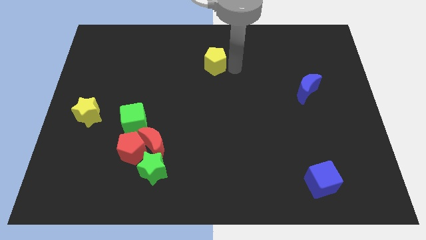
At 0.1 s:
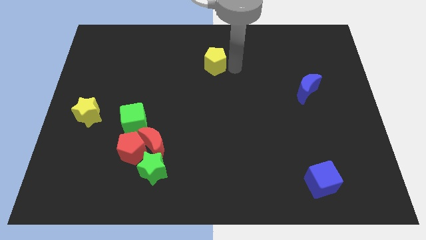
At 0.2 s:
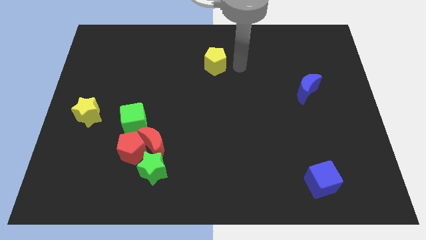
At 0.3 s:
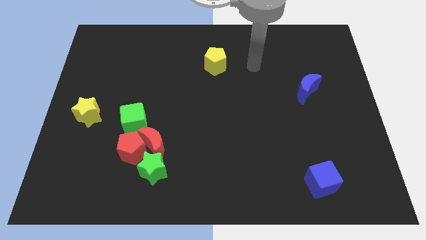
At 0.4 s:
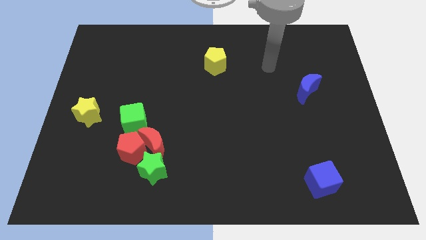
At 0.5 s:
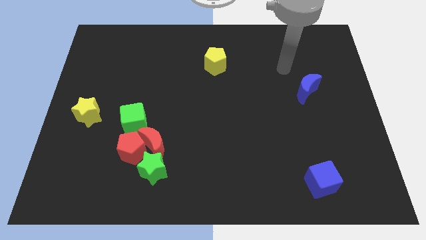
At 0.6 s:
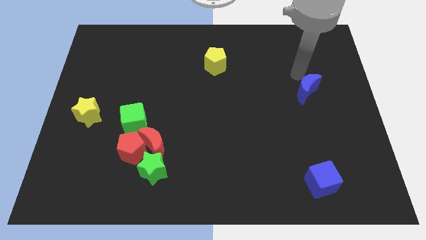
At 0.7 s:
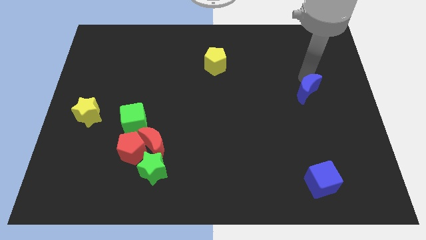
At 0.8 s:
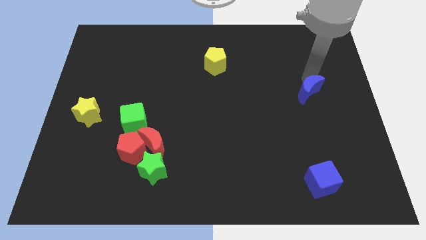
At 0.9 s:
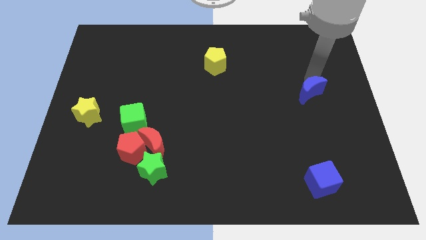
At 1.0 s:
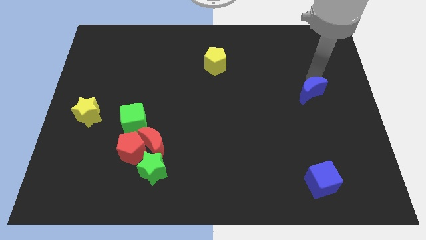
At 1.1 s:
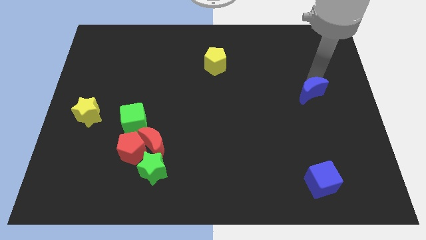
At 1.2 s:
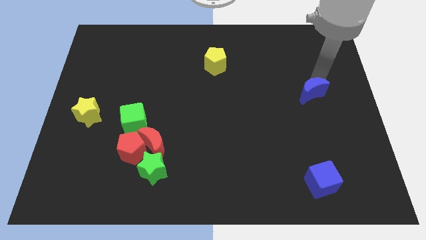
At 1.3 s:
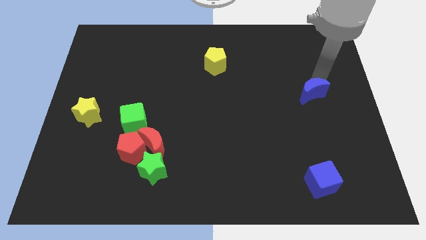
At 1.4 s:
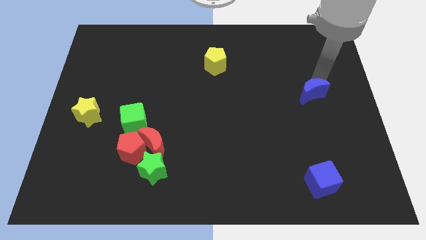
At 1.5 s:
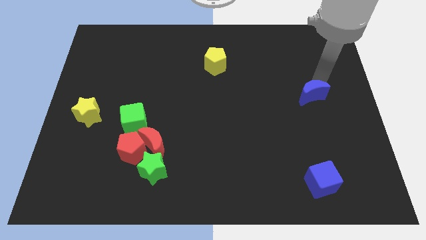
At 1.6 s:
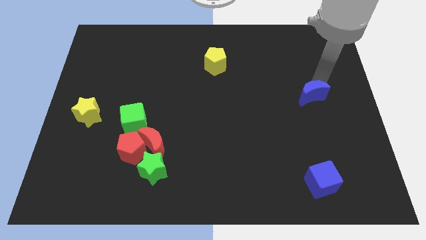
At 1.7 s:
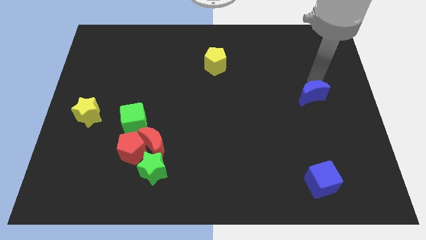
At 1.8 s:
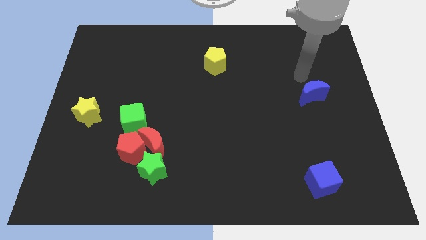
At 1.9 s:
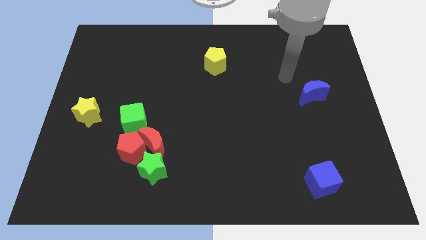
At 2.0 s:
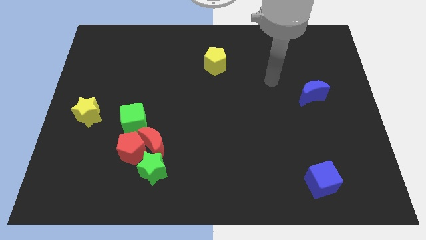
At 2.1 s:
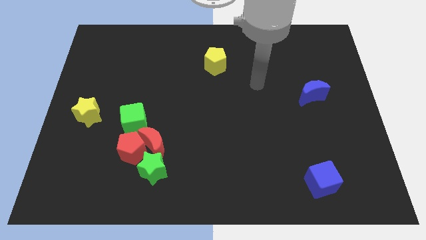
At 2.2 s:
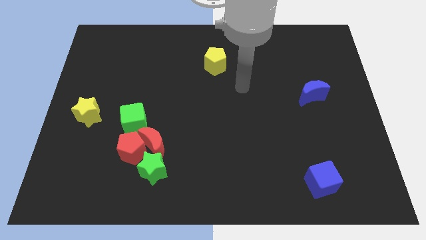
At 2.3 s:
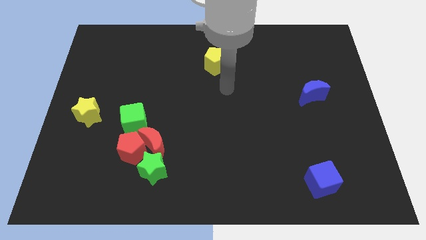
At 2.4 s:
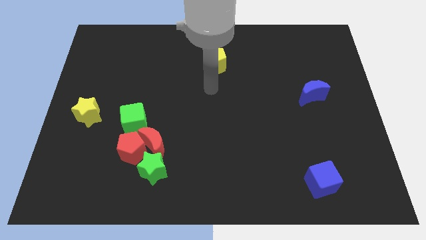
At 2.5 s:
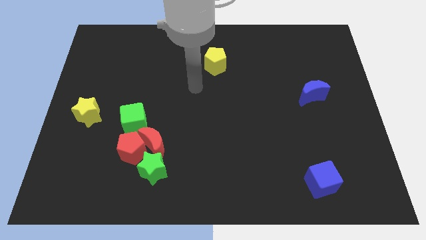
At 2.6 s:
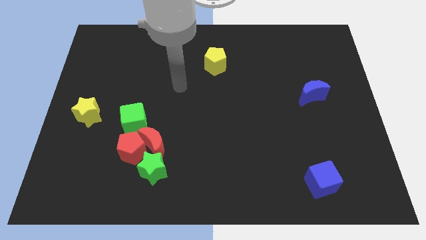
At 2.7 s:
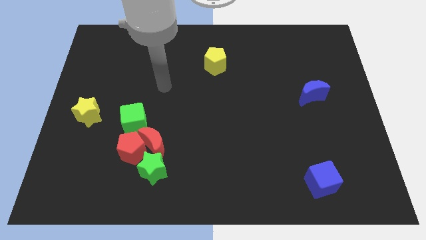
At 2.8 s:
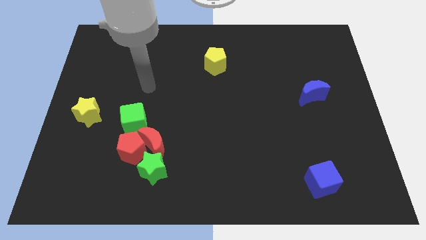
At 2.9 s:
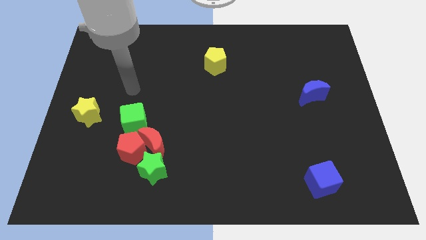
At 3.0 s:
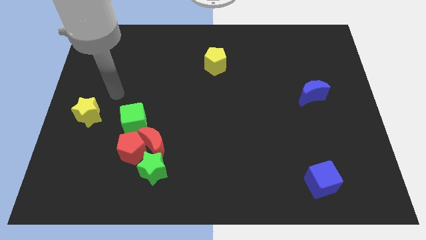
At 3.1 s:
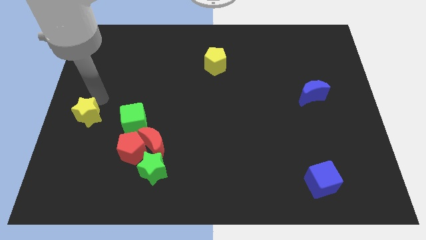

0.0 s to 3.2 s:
move your hand to the top of the yellow star

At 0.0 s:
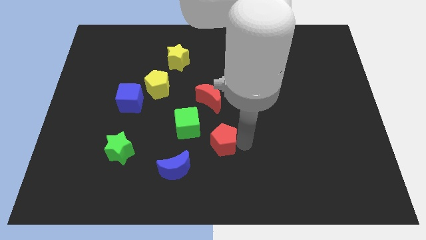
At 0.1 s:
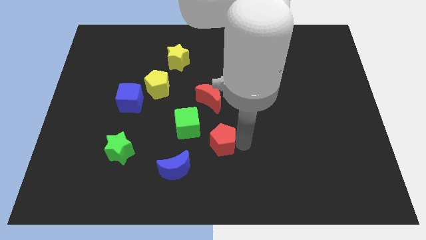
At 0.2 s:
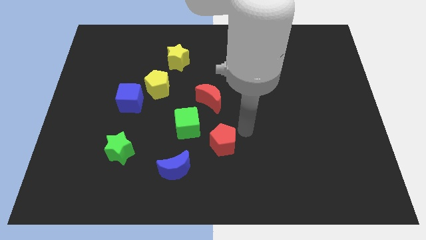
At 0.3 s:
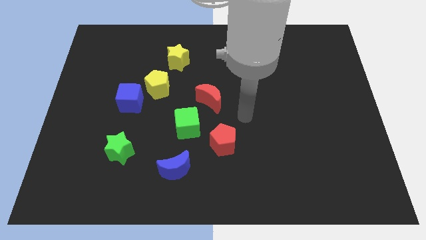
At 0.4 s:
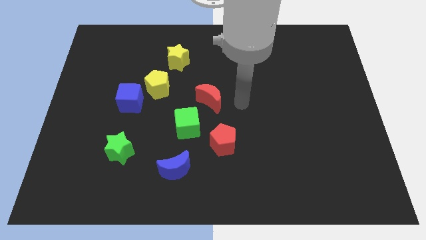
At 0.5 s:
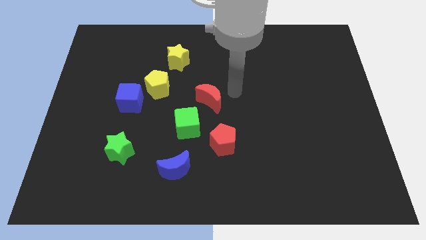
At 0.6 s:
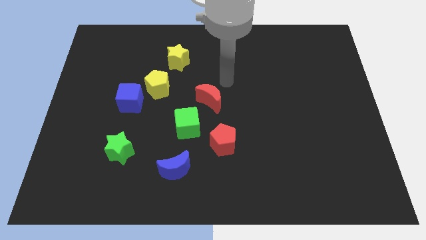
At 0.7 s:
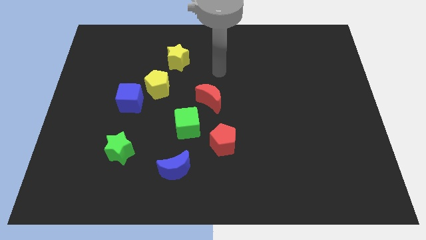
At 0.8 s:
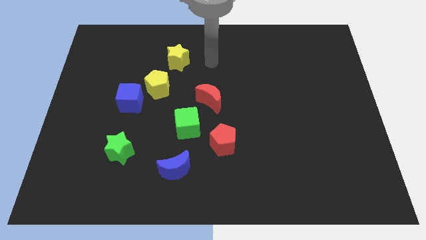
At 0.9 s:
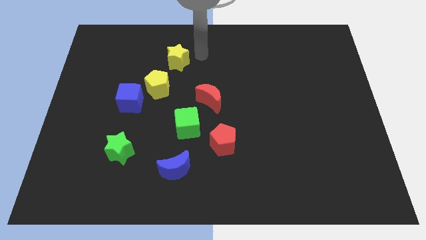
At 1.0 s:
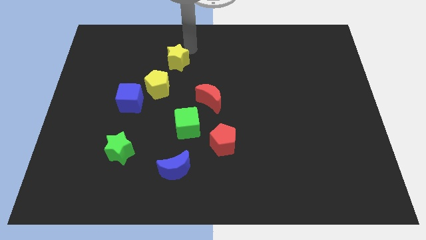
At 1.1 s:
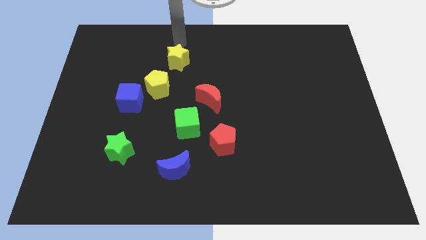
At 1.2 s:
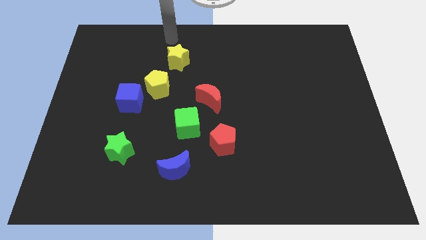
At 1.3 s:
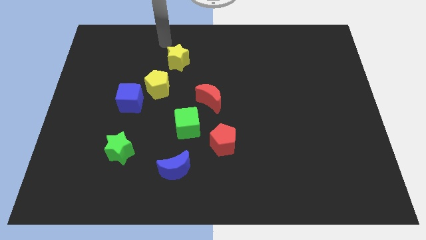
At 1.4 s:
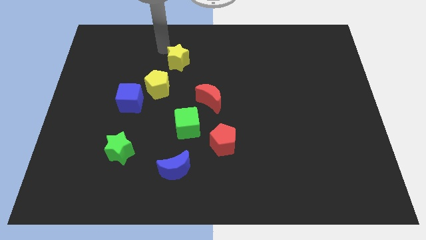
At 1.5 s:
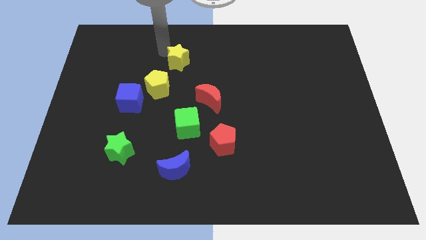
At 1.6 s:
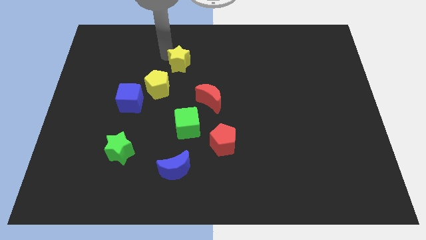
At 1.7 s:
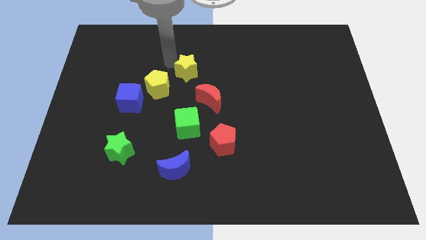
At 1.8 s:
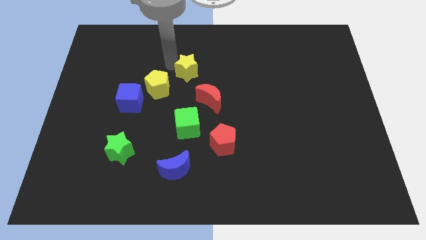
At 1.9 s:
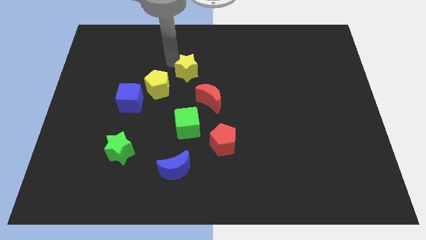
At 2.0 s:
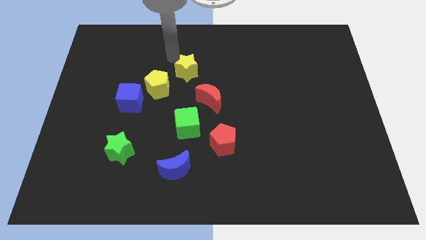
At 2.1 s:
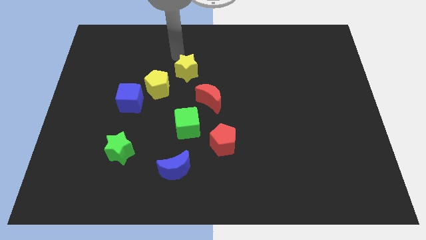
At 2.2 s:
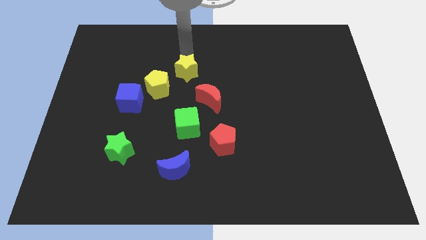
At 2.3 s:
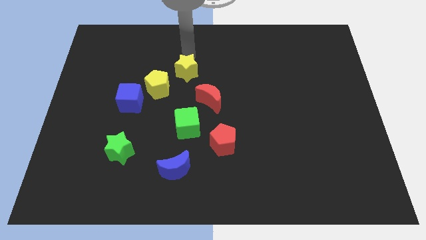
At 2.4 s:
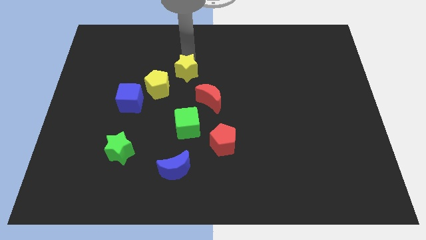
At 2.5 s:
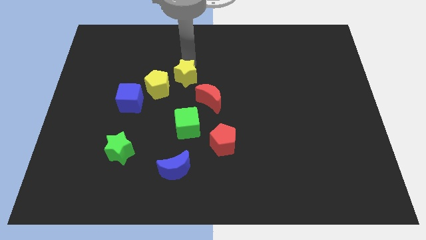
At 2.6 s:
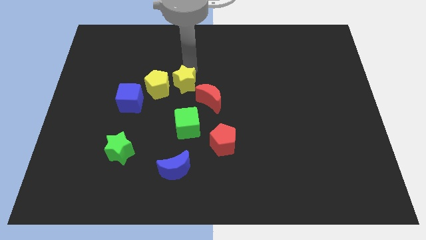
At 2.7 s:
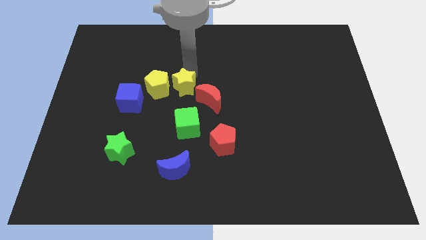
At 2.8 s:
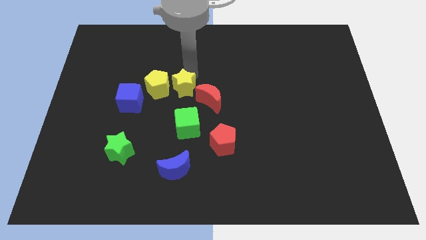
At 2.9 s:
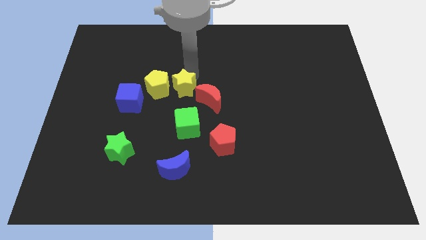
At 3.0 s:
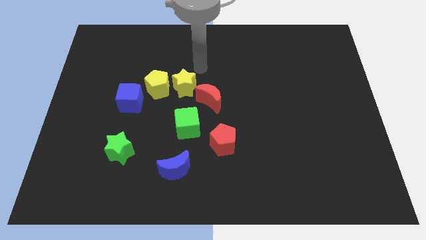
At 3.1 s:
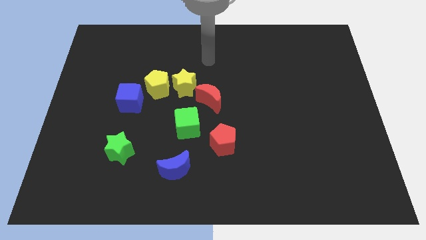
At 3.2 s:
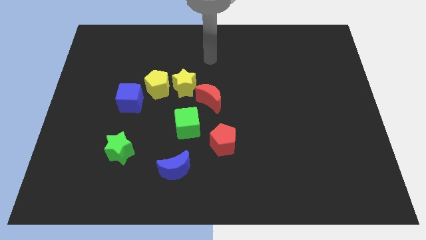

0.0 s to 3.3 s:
move the yellow star in between the red moon and yellow pentagon

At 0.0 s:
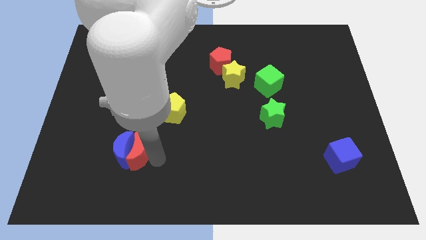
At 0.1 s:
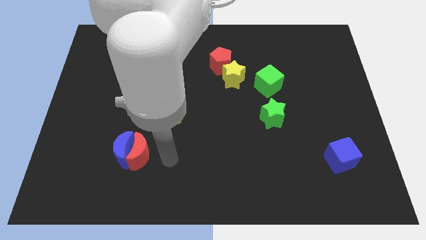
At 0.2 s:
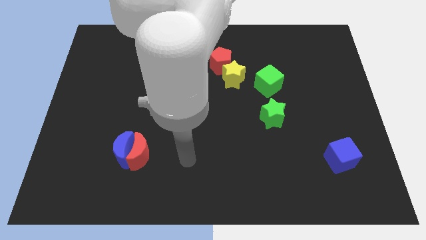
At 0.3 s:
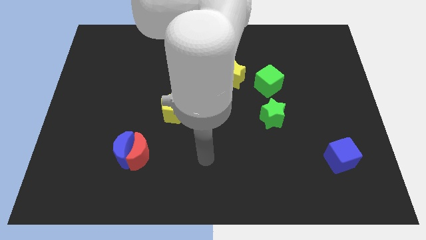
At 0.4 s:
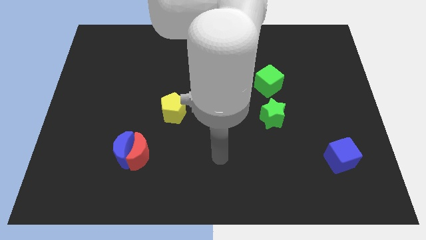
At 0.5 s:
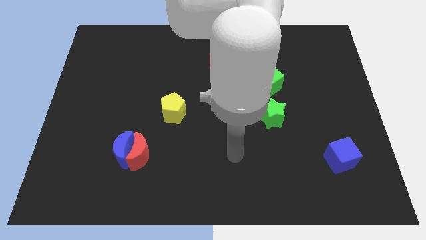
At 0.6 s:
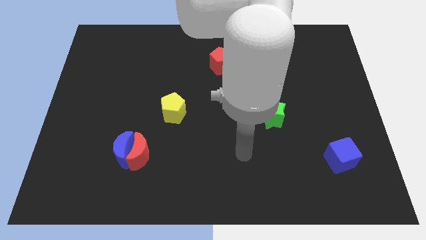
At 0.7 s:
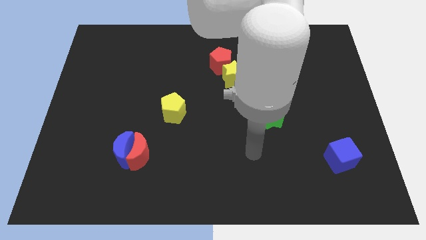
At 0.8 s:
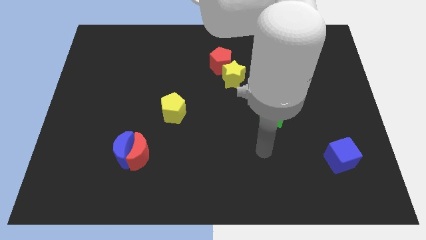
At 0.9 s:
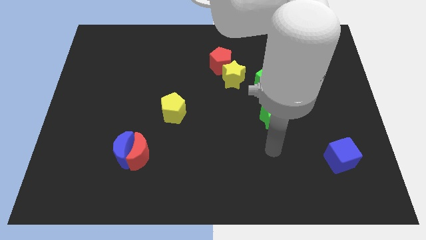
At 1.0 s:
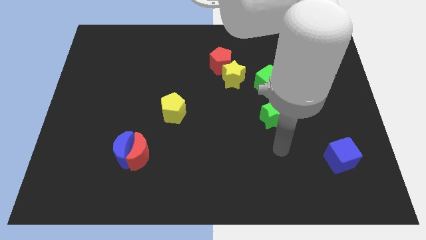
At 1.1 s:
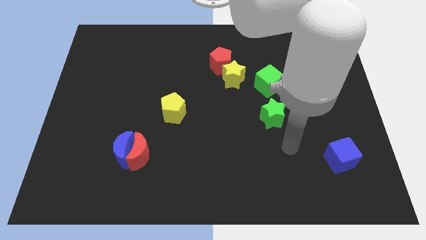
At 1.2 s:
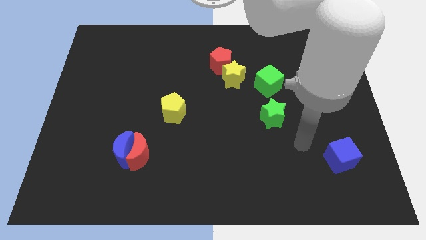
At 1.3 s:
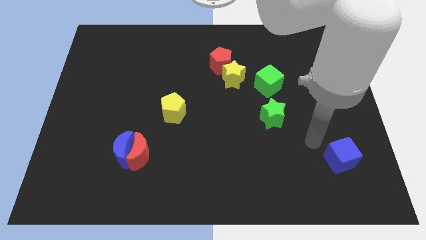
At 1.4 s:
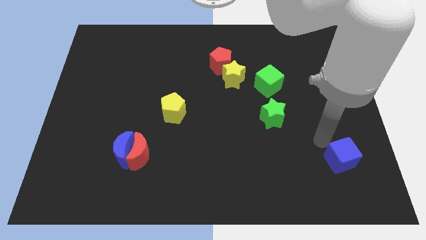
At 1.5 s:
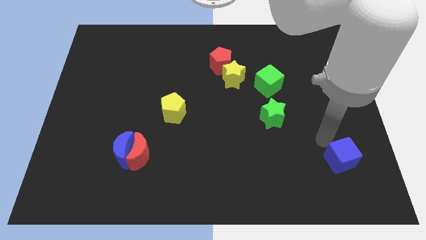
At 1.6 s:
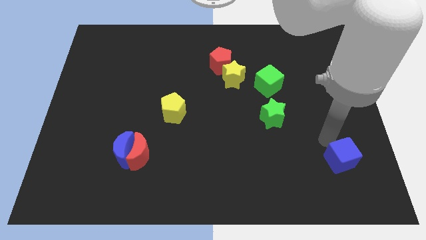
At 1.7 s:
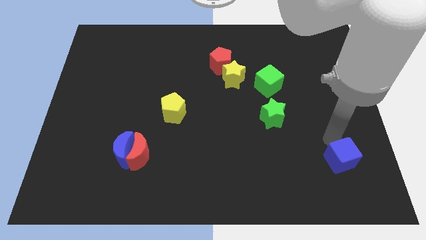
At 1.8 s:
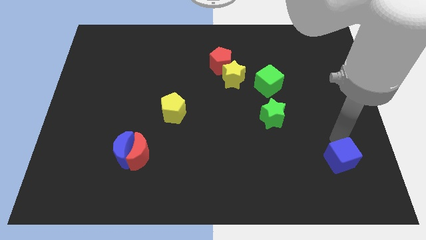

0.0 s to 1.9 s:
move your arm to the top of the blue cube

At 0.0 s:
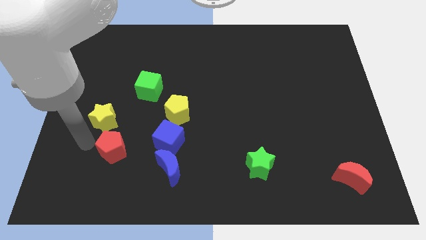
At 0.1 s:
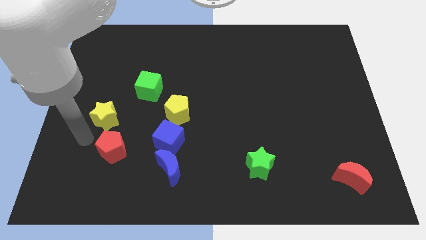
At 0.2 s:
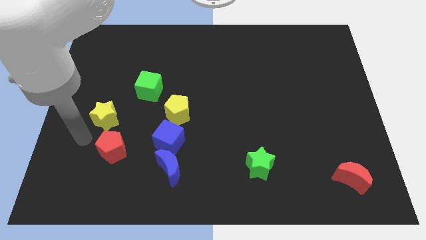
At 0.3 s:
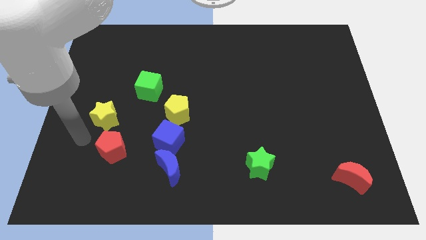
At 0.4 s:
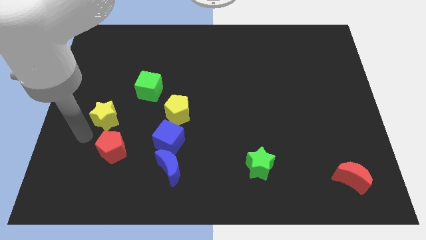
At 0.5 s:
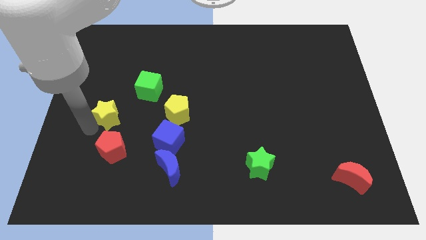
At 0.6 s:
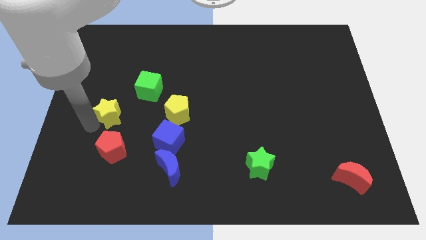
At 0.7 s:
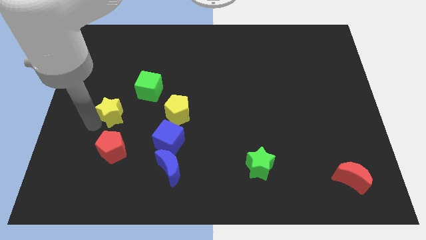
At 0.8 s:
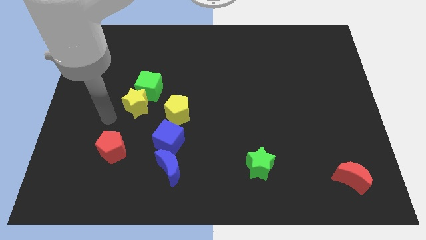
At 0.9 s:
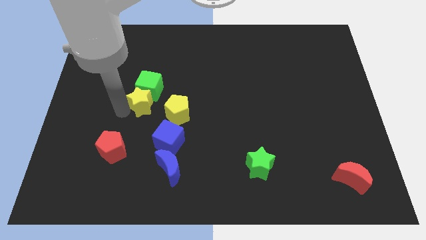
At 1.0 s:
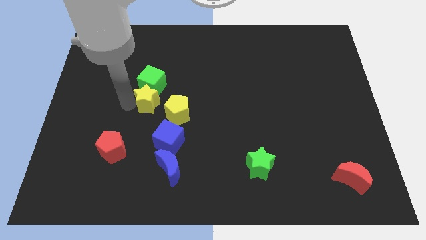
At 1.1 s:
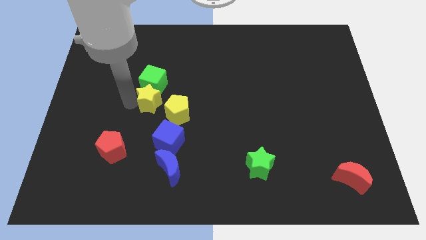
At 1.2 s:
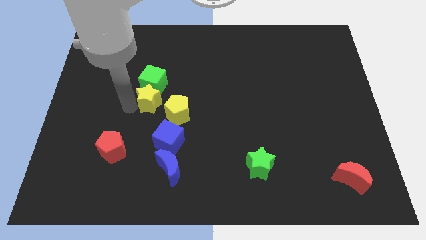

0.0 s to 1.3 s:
push yellow star into green cube
